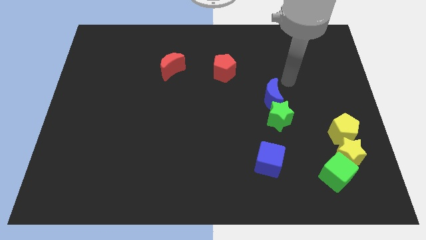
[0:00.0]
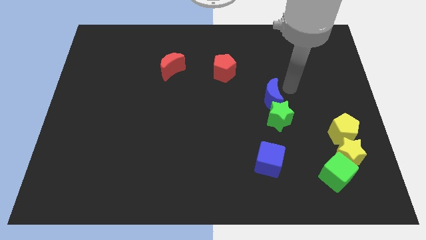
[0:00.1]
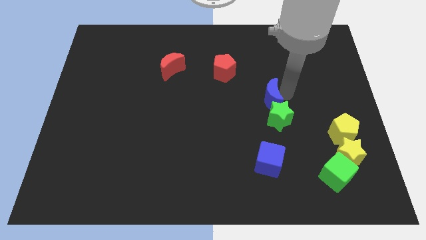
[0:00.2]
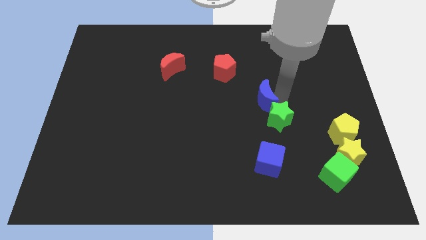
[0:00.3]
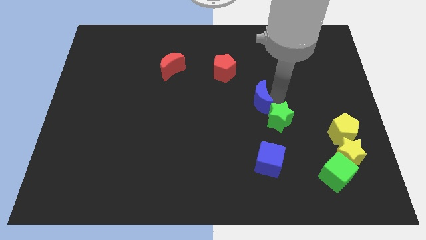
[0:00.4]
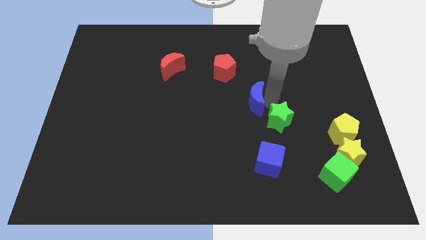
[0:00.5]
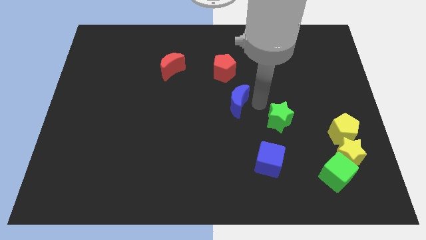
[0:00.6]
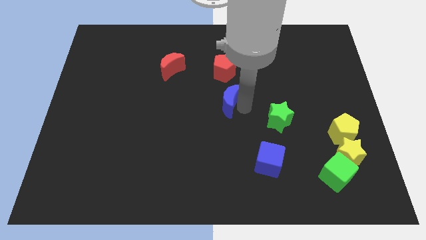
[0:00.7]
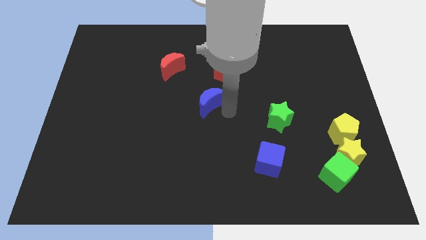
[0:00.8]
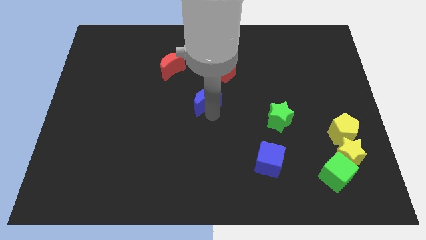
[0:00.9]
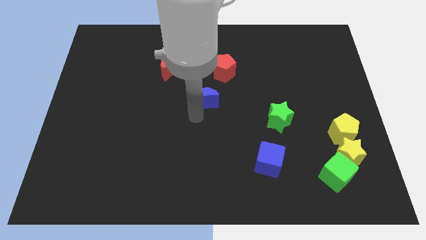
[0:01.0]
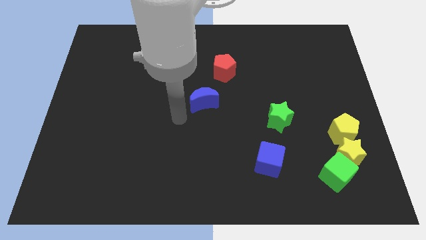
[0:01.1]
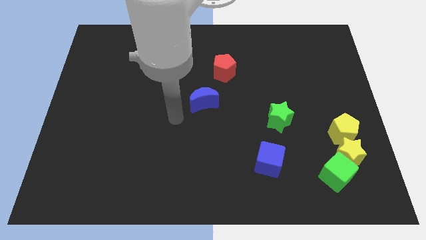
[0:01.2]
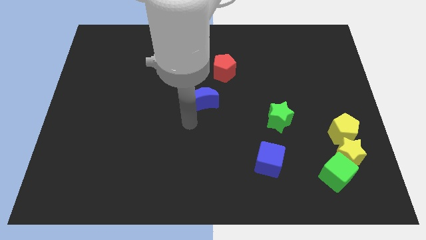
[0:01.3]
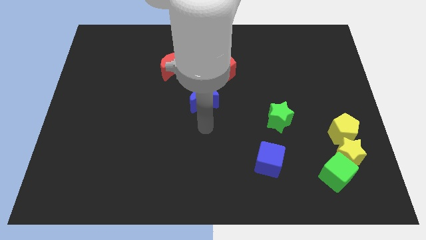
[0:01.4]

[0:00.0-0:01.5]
separate the blue moon from green star

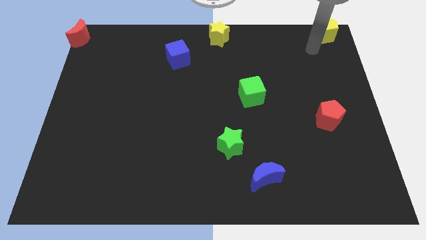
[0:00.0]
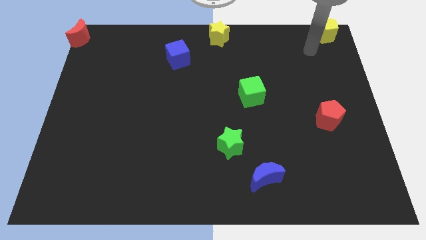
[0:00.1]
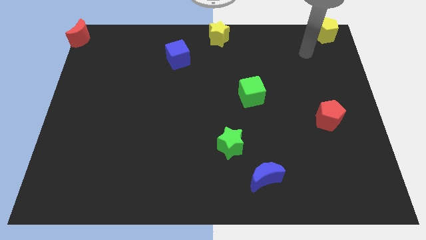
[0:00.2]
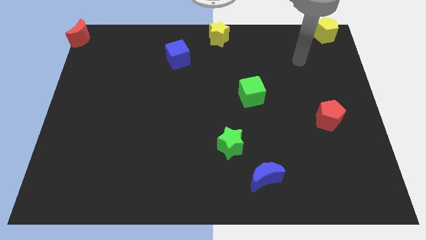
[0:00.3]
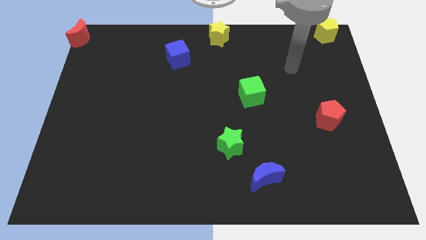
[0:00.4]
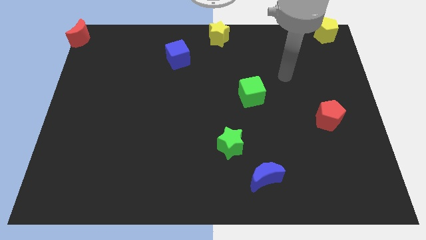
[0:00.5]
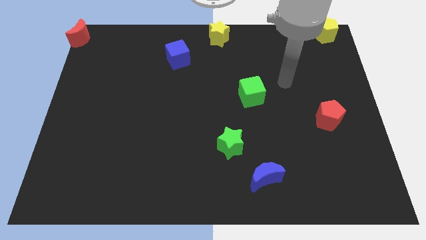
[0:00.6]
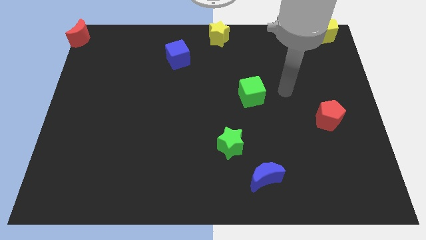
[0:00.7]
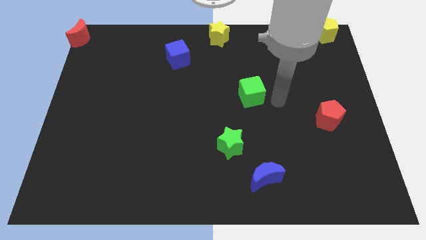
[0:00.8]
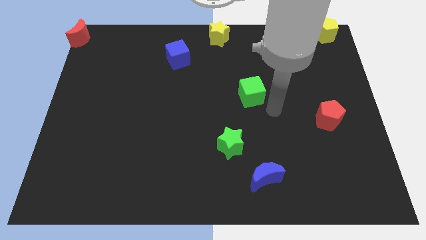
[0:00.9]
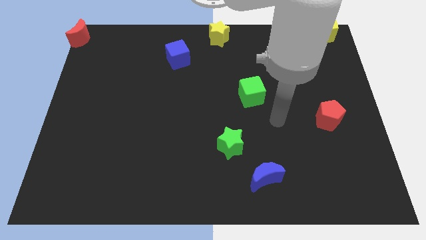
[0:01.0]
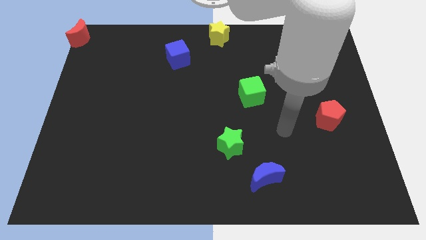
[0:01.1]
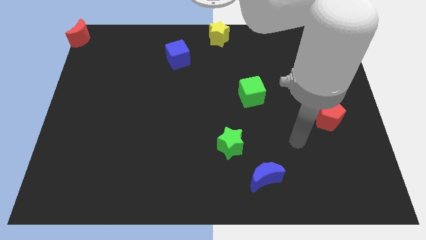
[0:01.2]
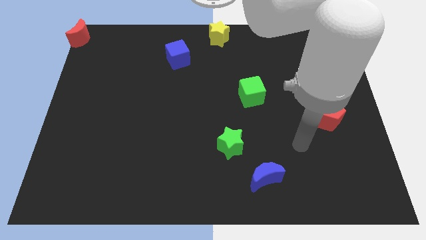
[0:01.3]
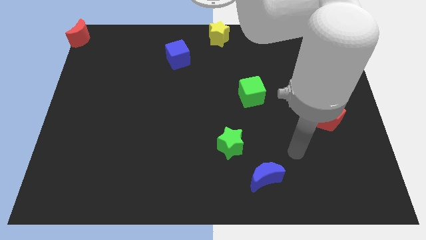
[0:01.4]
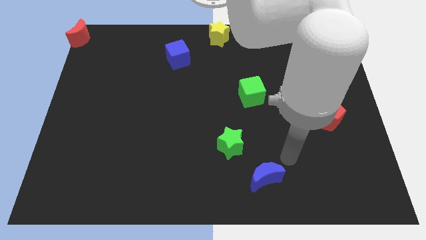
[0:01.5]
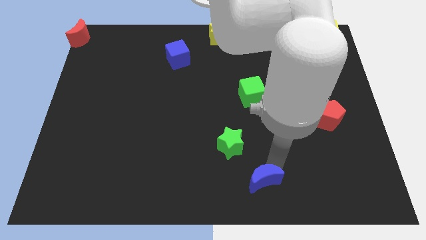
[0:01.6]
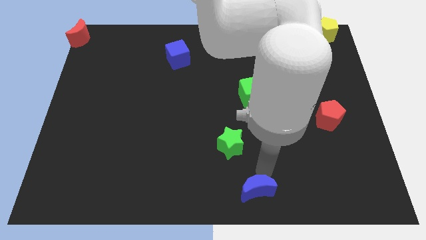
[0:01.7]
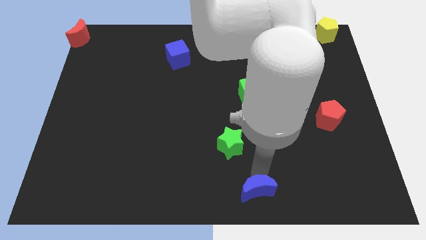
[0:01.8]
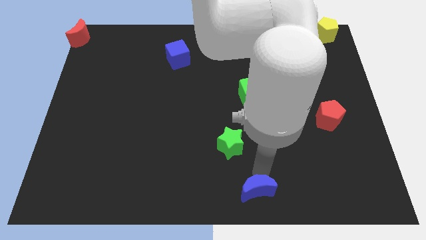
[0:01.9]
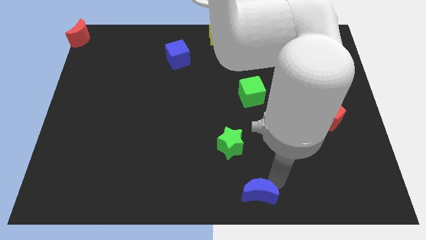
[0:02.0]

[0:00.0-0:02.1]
slightly push the blue moon to the bottom center

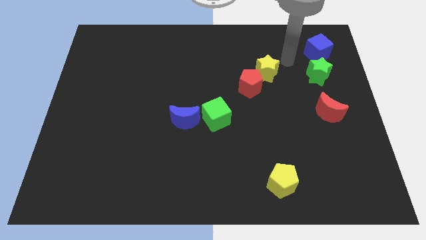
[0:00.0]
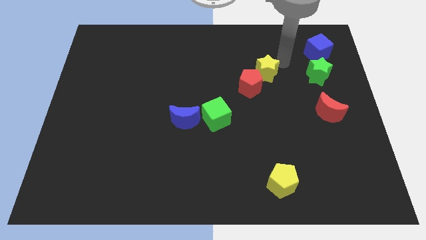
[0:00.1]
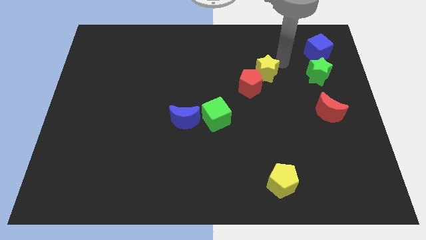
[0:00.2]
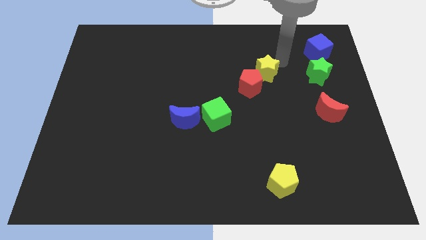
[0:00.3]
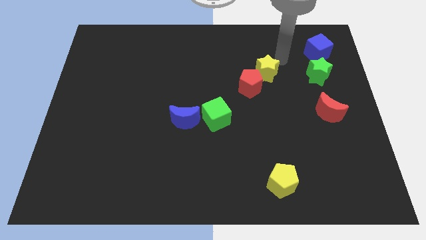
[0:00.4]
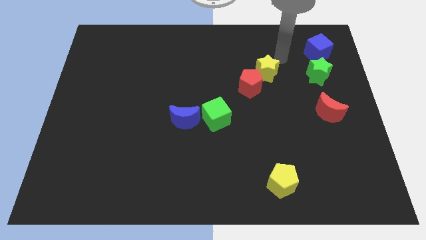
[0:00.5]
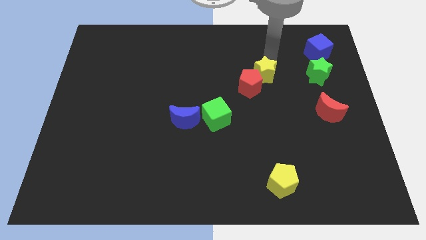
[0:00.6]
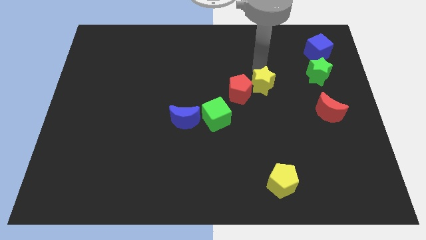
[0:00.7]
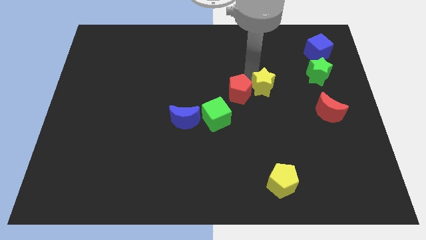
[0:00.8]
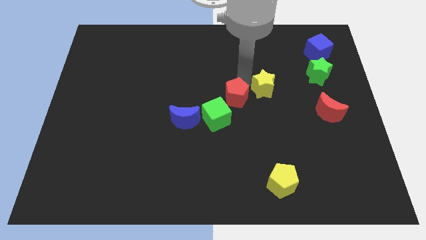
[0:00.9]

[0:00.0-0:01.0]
push yellow star in to red pentagon

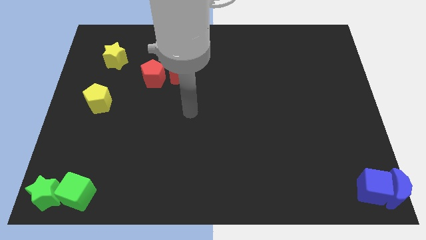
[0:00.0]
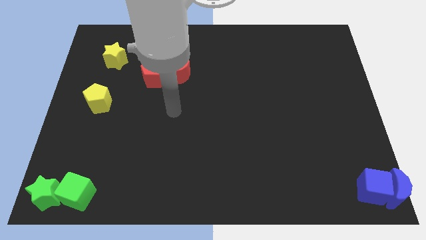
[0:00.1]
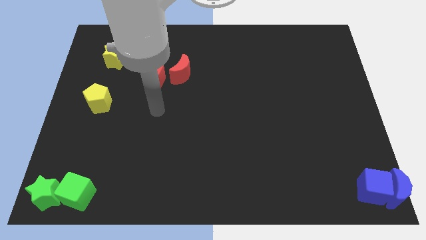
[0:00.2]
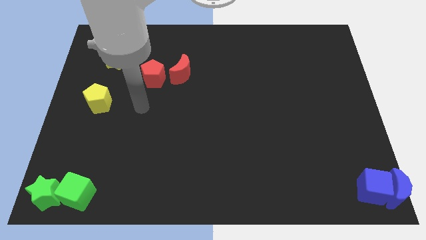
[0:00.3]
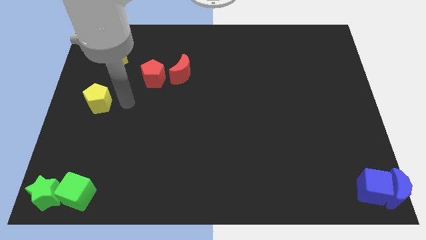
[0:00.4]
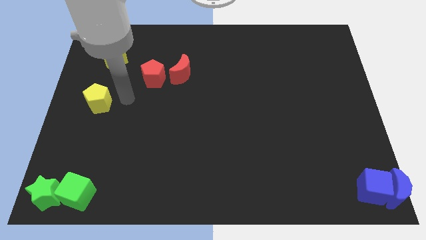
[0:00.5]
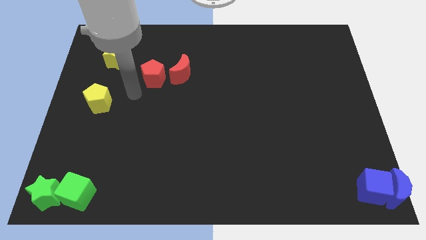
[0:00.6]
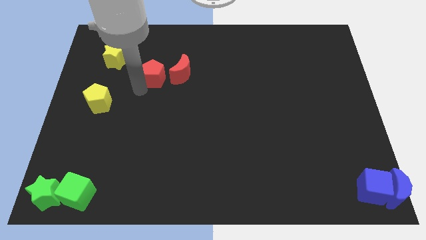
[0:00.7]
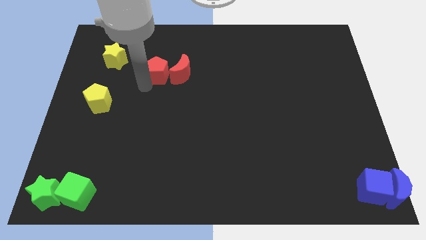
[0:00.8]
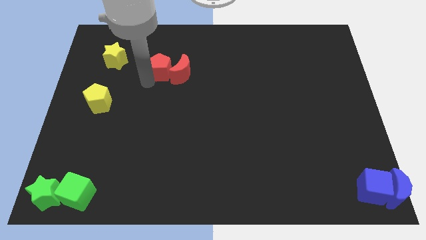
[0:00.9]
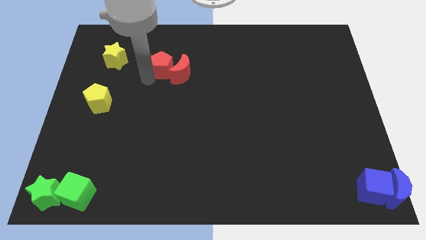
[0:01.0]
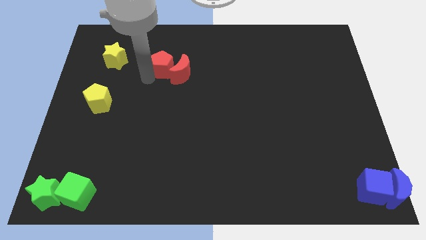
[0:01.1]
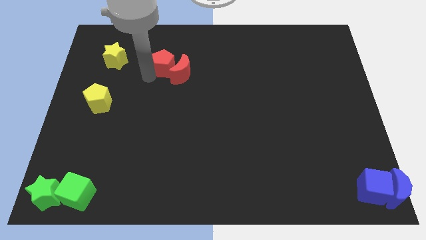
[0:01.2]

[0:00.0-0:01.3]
place the red pentagon in between the red moon and yellow star

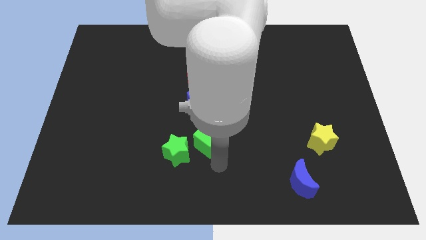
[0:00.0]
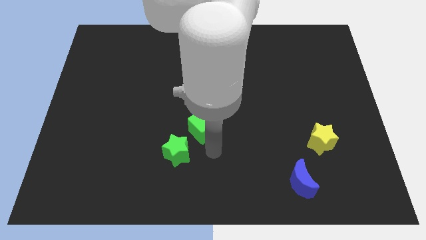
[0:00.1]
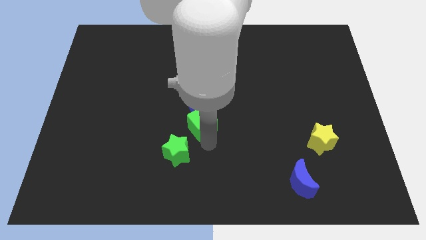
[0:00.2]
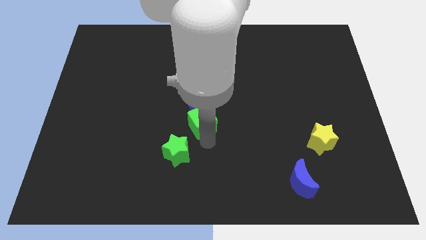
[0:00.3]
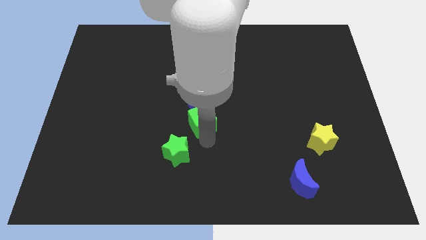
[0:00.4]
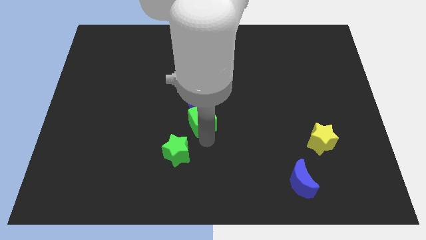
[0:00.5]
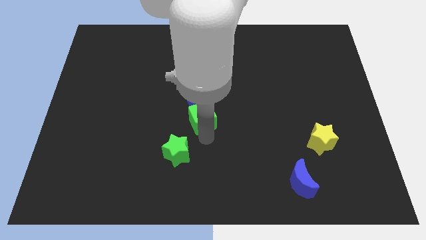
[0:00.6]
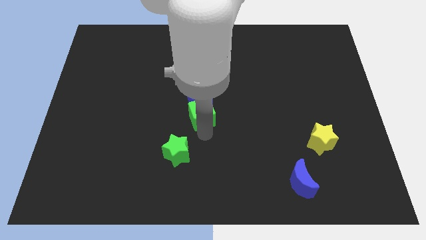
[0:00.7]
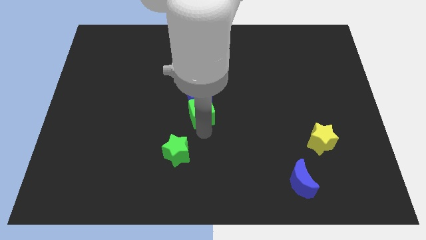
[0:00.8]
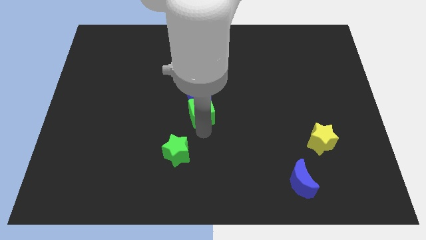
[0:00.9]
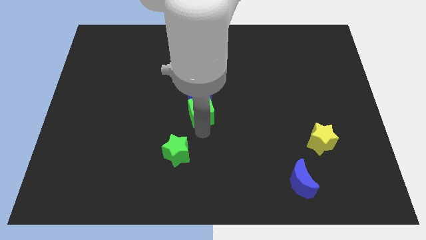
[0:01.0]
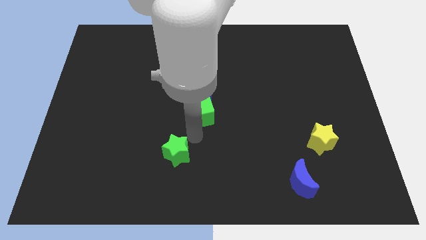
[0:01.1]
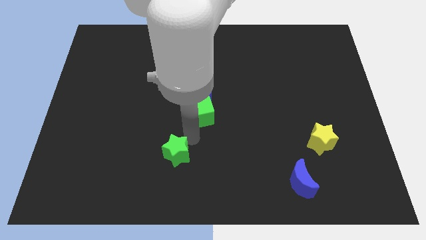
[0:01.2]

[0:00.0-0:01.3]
push the green cube into blue cube

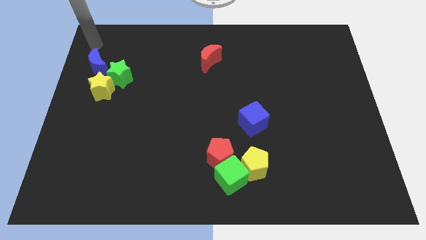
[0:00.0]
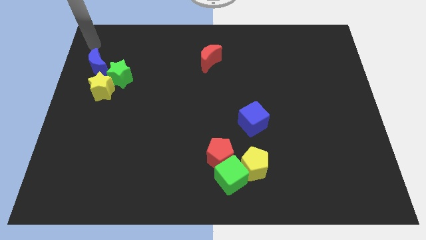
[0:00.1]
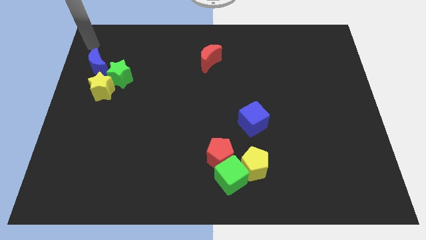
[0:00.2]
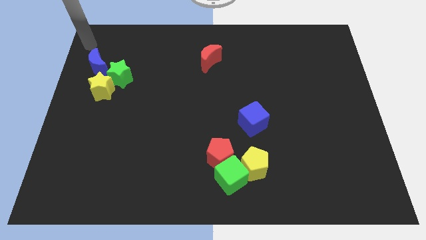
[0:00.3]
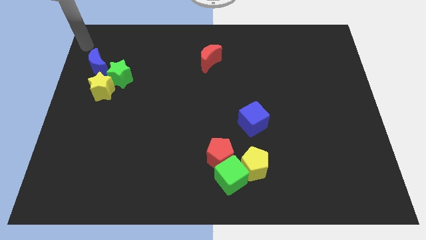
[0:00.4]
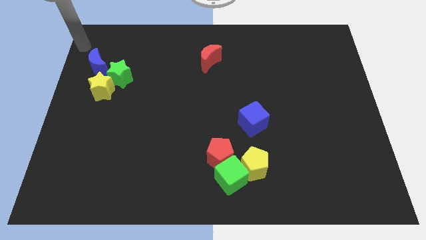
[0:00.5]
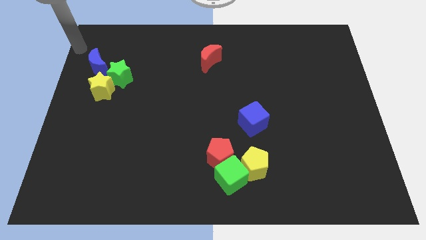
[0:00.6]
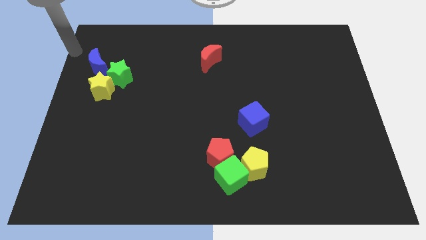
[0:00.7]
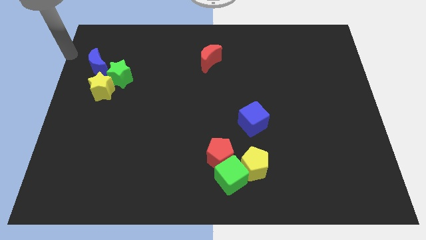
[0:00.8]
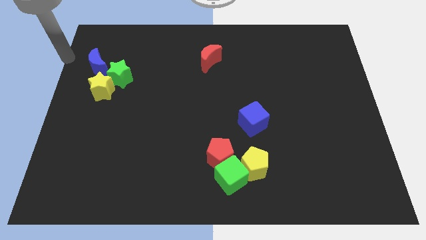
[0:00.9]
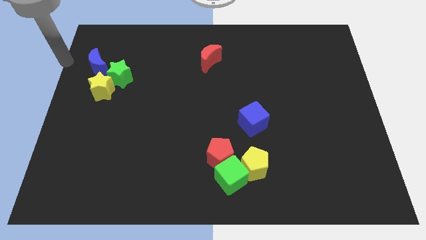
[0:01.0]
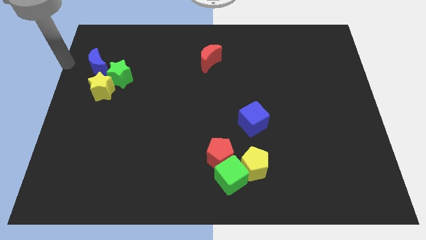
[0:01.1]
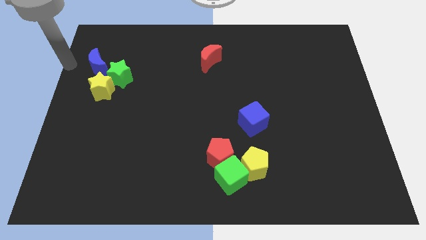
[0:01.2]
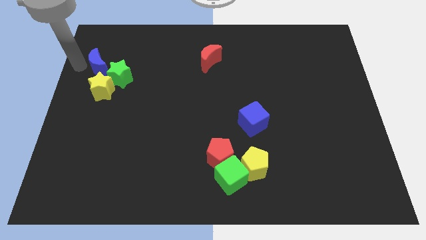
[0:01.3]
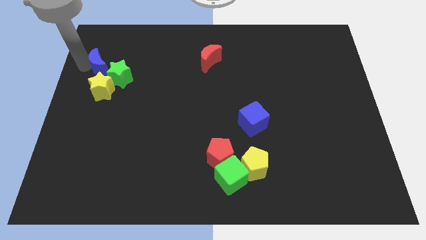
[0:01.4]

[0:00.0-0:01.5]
push the arm to the left of the blue moon

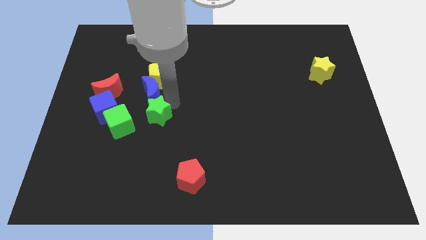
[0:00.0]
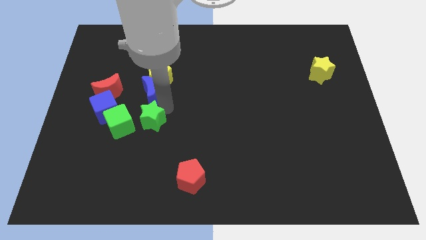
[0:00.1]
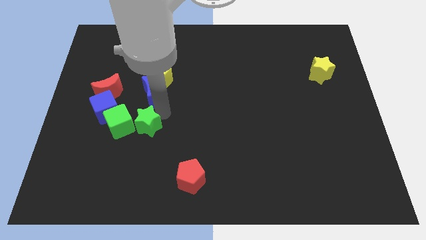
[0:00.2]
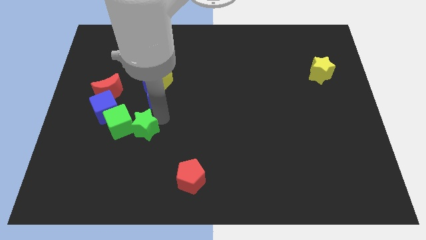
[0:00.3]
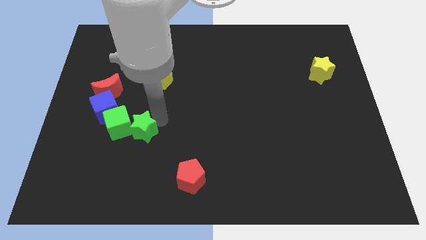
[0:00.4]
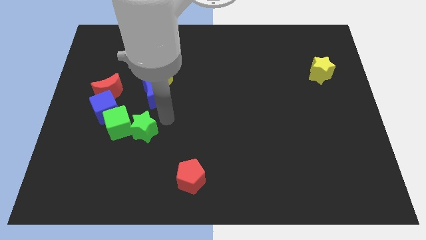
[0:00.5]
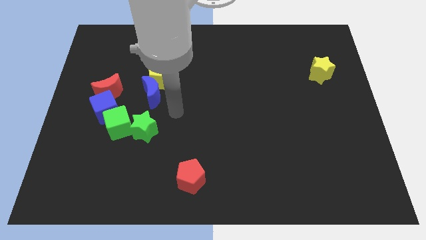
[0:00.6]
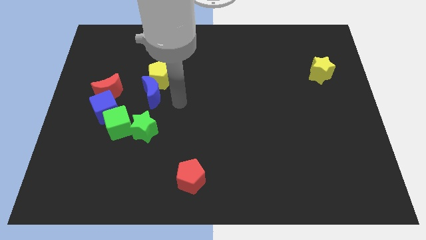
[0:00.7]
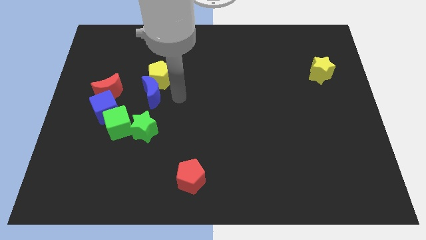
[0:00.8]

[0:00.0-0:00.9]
push the green star to the right of the green cube
